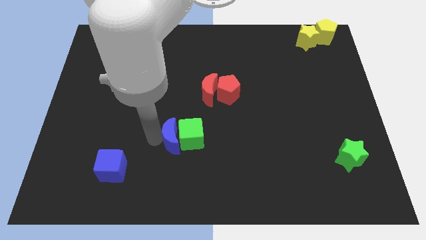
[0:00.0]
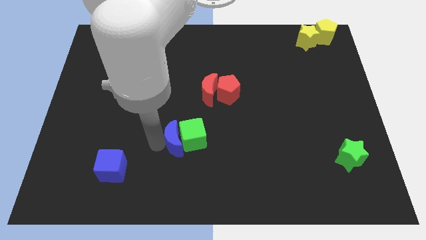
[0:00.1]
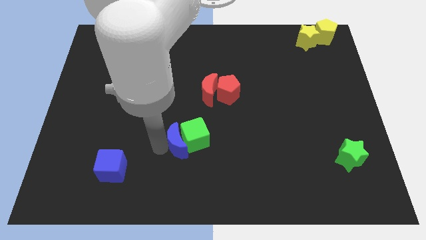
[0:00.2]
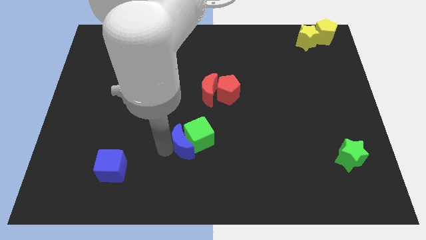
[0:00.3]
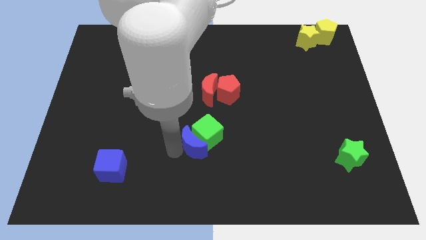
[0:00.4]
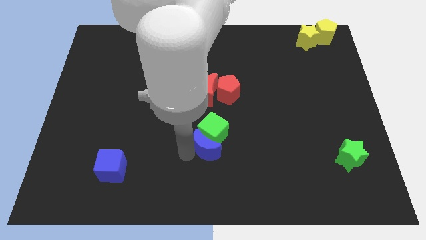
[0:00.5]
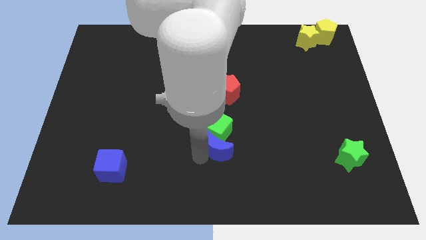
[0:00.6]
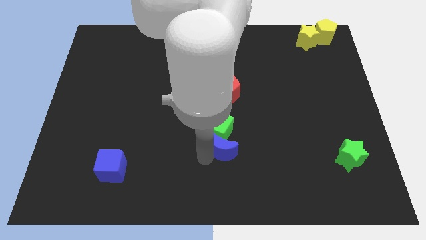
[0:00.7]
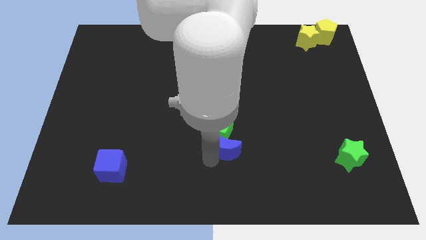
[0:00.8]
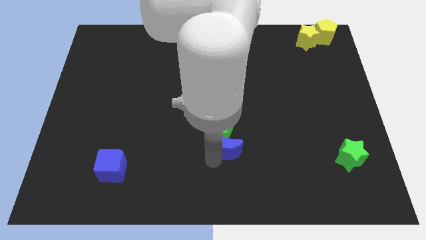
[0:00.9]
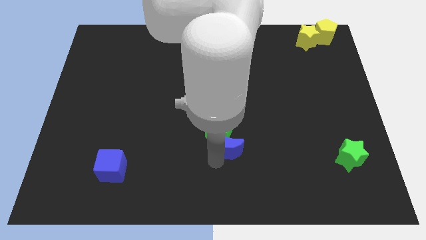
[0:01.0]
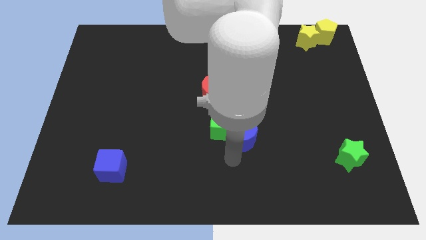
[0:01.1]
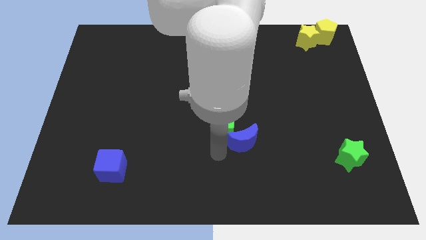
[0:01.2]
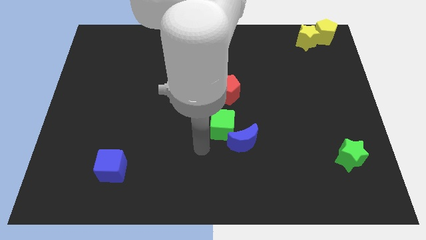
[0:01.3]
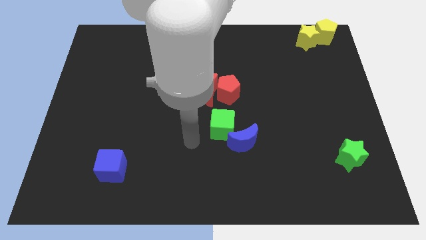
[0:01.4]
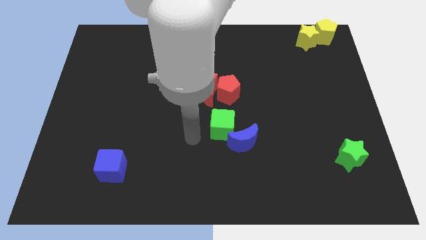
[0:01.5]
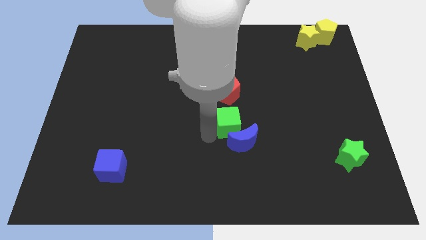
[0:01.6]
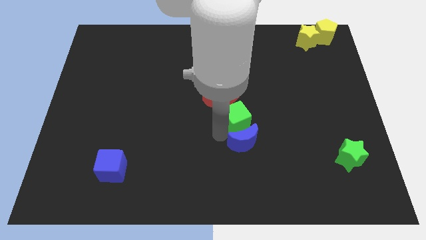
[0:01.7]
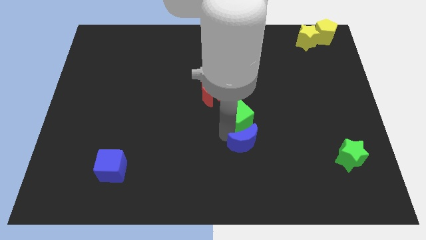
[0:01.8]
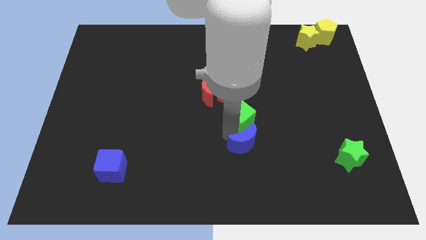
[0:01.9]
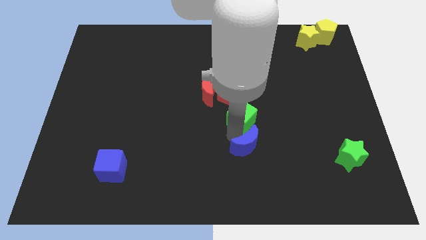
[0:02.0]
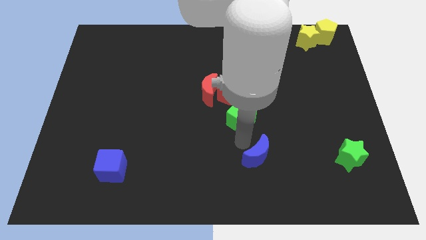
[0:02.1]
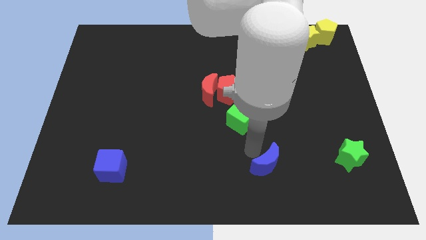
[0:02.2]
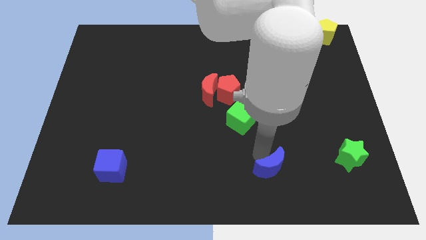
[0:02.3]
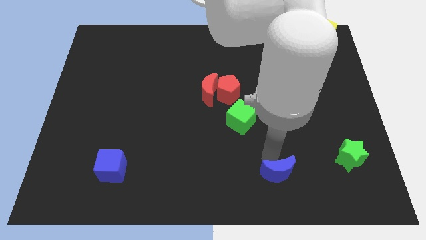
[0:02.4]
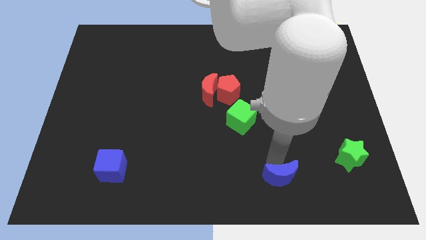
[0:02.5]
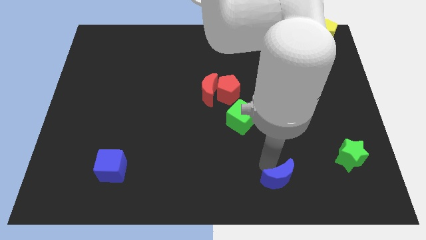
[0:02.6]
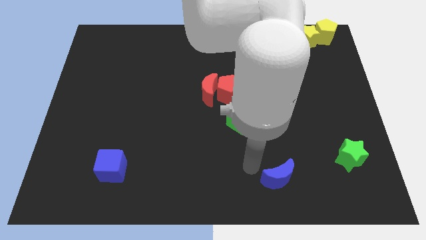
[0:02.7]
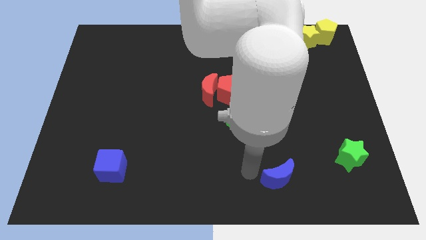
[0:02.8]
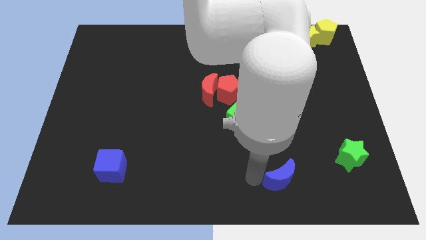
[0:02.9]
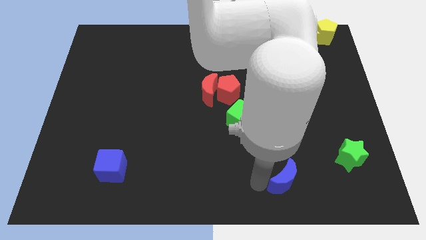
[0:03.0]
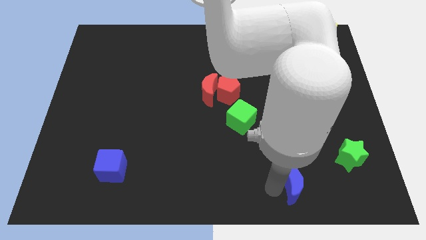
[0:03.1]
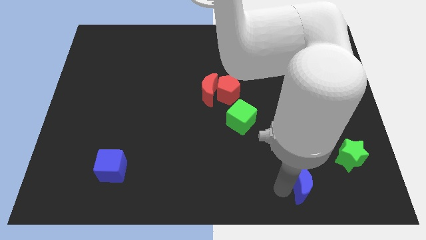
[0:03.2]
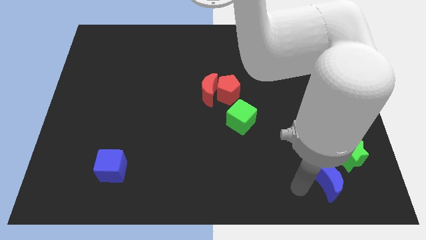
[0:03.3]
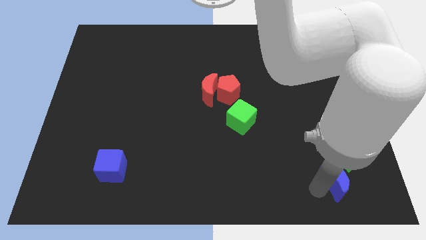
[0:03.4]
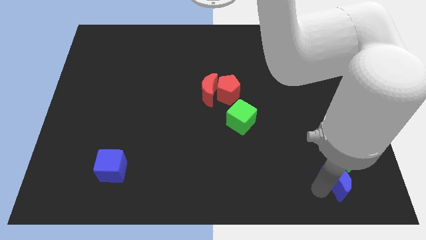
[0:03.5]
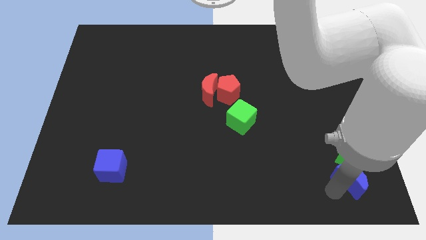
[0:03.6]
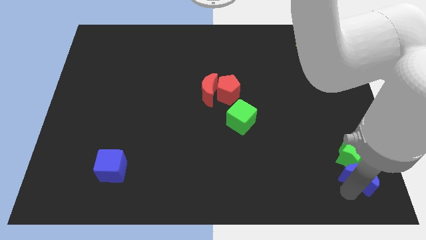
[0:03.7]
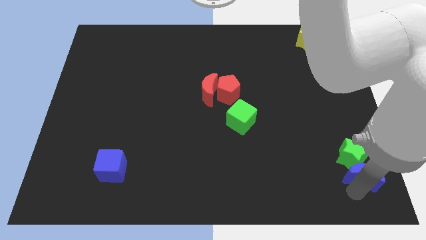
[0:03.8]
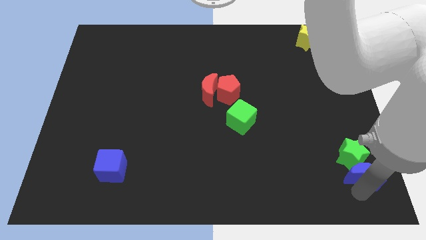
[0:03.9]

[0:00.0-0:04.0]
place the blue crescent below the green star

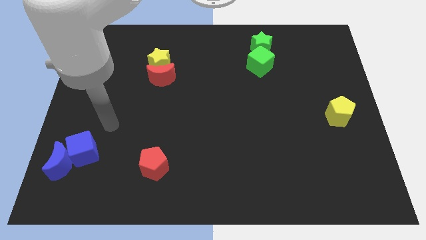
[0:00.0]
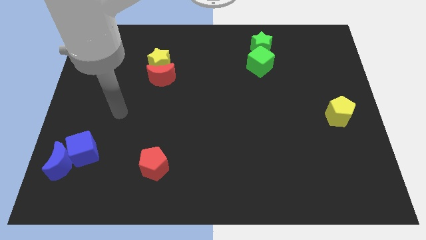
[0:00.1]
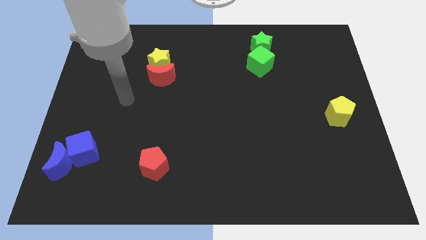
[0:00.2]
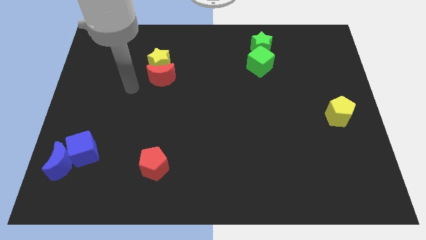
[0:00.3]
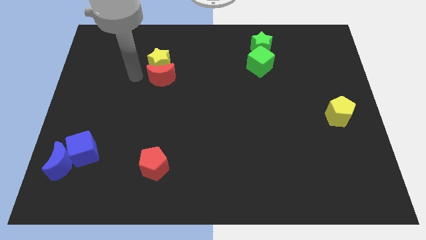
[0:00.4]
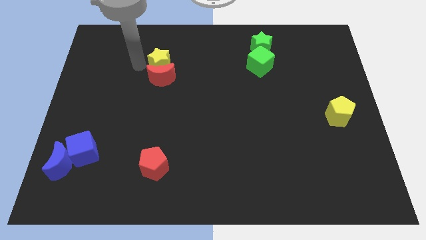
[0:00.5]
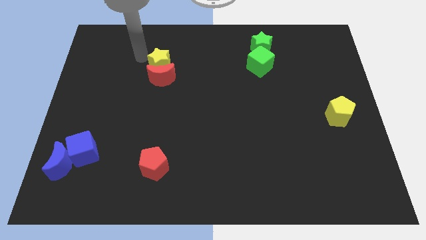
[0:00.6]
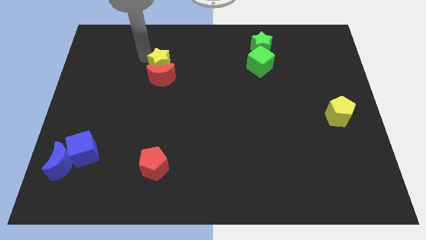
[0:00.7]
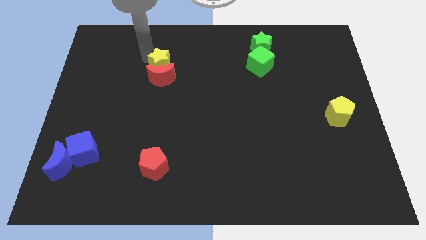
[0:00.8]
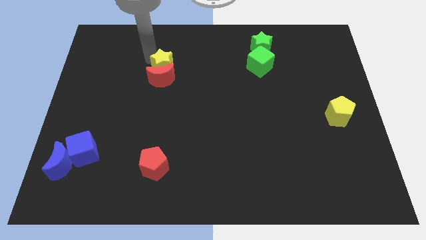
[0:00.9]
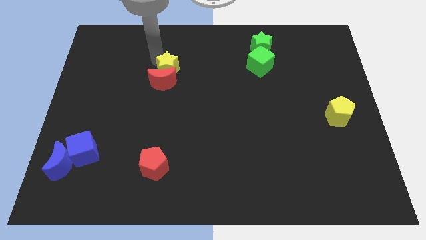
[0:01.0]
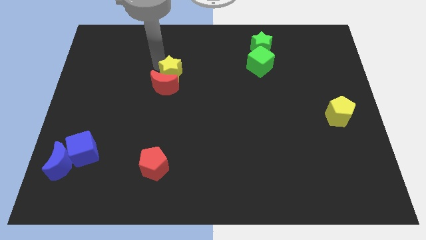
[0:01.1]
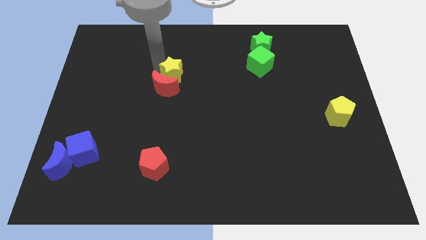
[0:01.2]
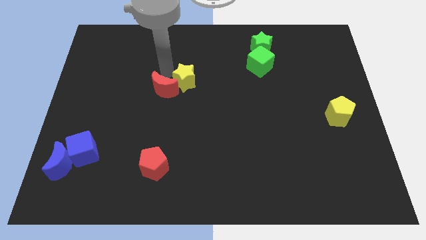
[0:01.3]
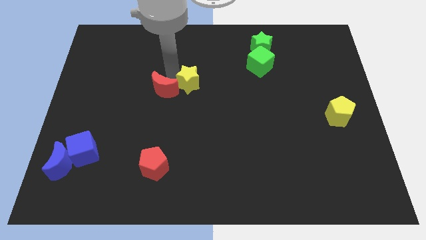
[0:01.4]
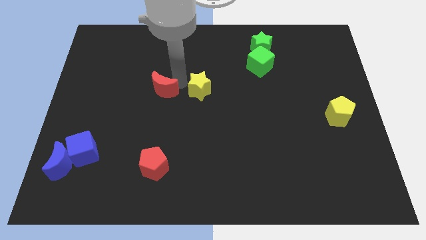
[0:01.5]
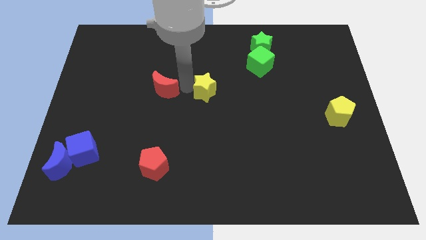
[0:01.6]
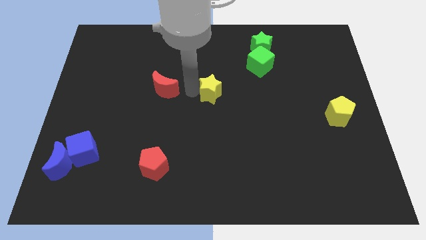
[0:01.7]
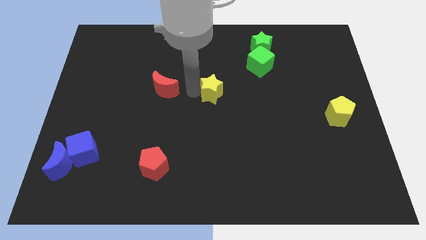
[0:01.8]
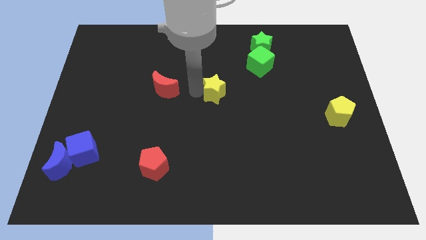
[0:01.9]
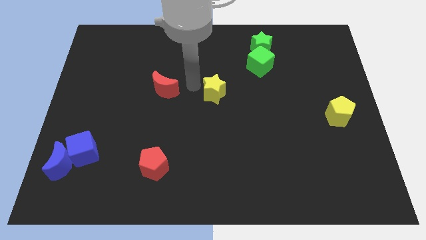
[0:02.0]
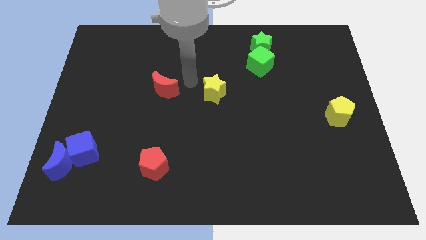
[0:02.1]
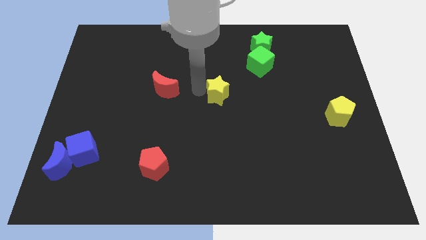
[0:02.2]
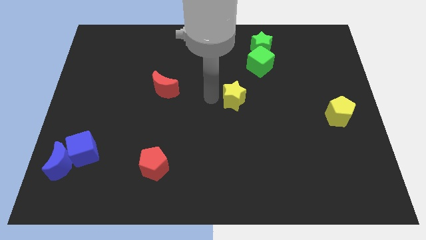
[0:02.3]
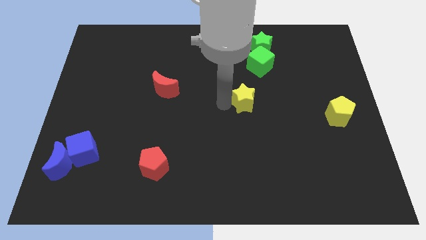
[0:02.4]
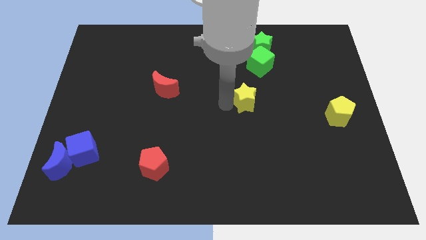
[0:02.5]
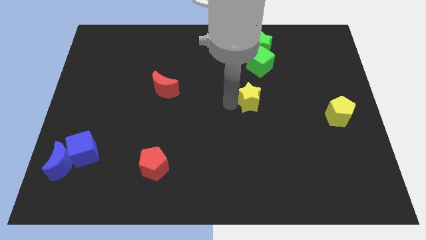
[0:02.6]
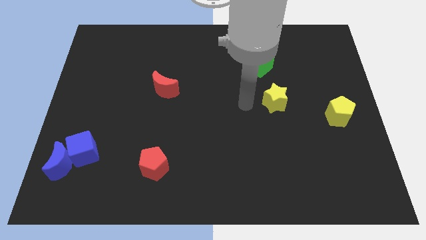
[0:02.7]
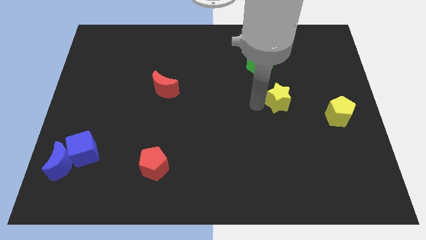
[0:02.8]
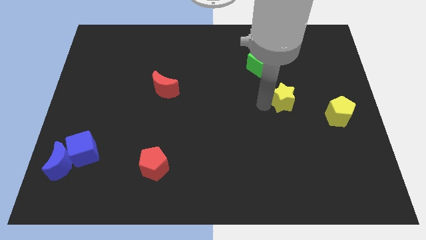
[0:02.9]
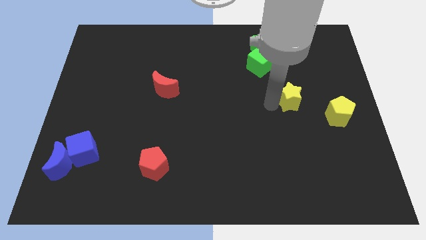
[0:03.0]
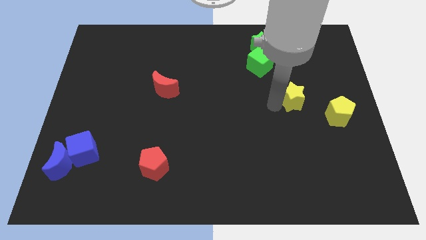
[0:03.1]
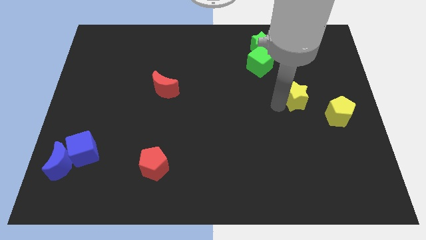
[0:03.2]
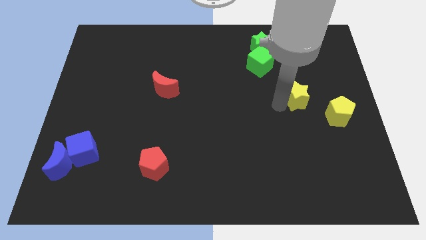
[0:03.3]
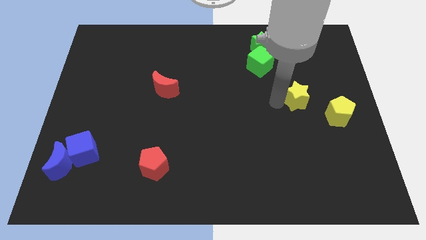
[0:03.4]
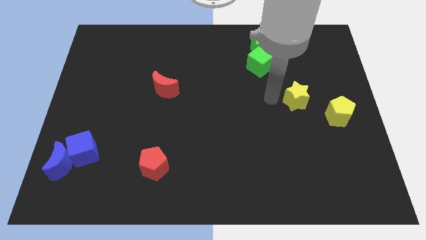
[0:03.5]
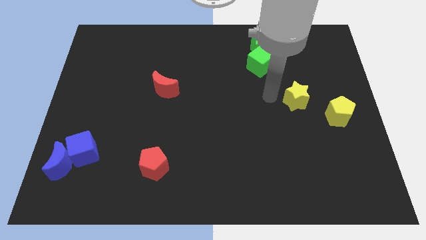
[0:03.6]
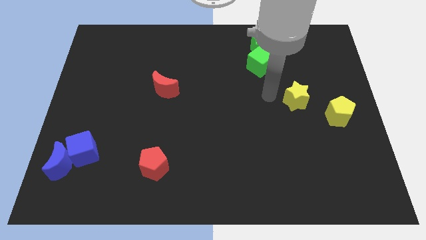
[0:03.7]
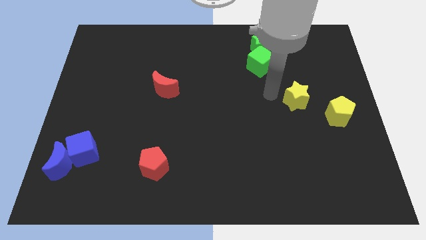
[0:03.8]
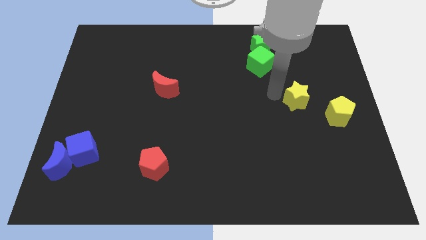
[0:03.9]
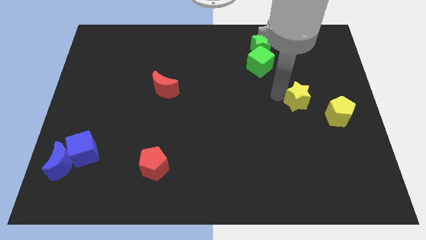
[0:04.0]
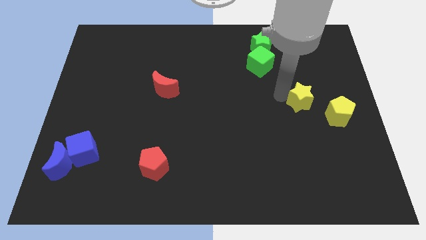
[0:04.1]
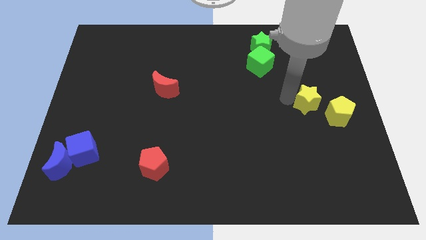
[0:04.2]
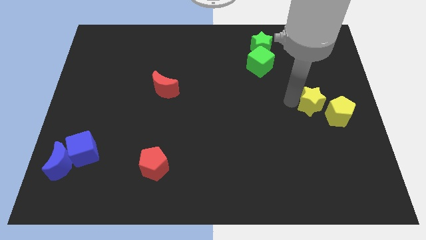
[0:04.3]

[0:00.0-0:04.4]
place the yellow star in between the yellow pentagon and green cube

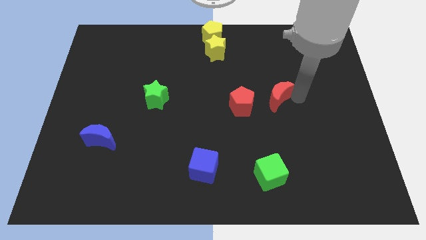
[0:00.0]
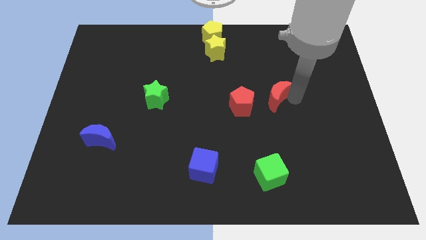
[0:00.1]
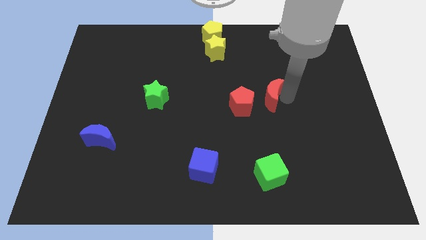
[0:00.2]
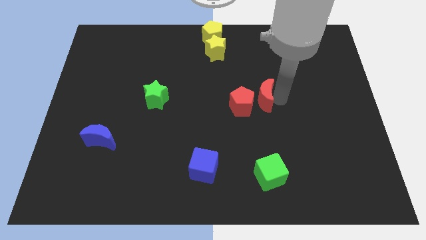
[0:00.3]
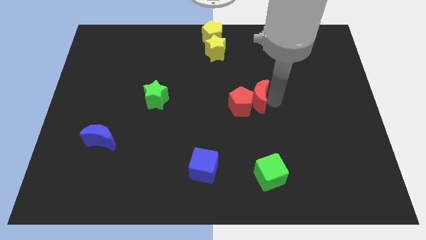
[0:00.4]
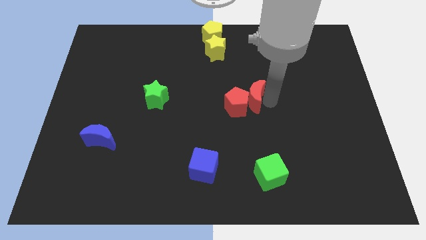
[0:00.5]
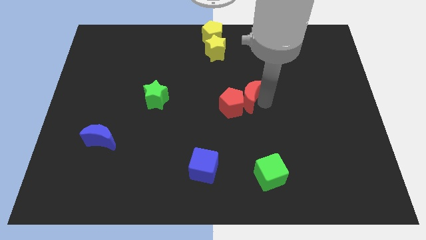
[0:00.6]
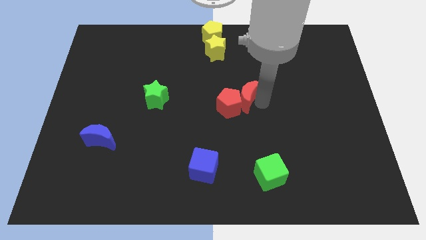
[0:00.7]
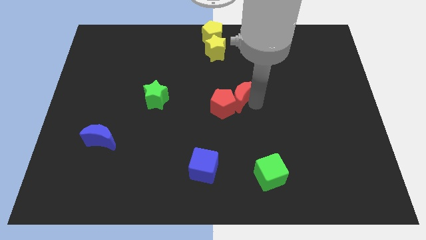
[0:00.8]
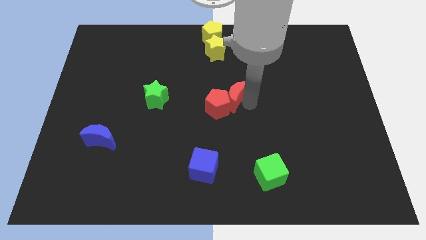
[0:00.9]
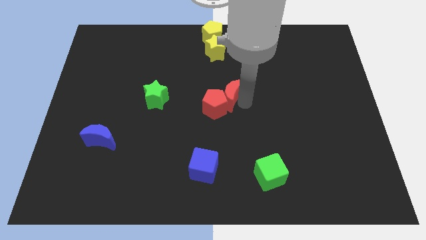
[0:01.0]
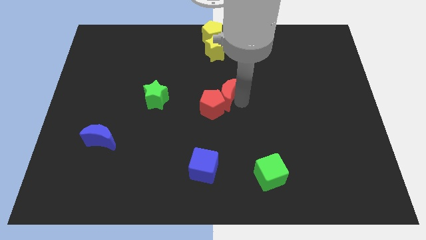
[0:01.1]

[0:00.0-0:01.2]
push the red moon into the red pentagon
